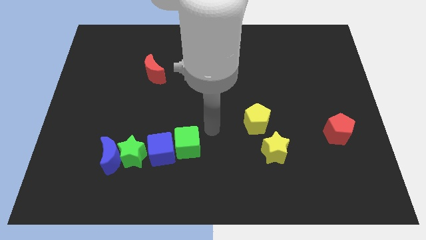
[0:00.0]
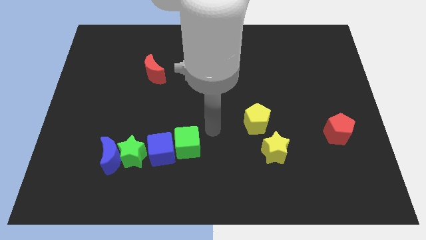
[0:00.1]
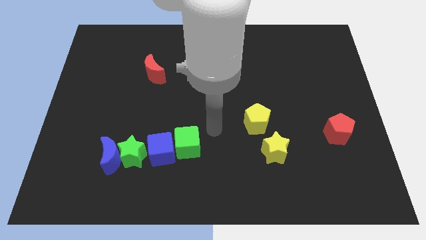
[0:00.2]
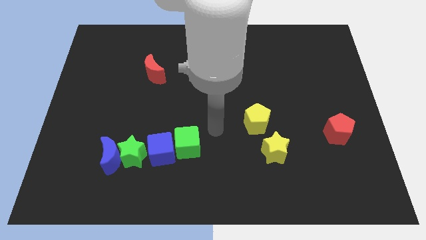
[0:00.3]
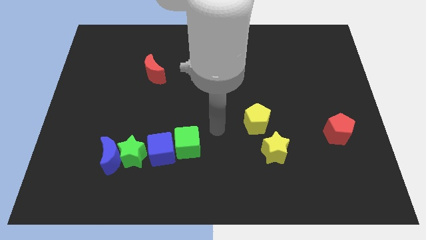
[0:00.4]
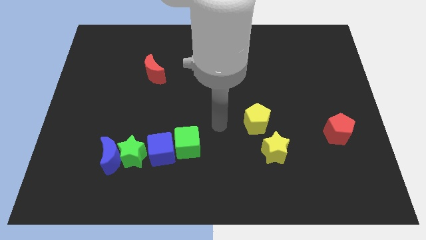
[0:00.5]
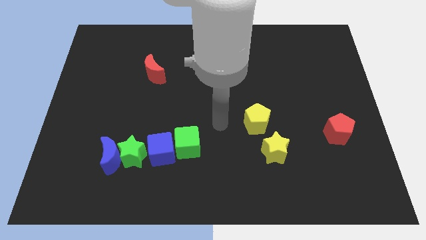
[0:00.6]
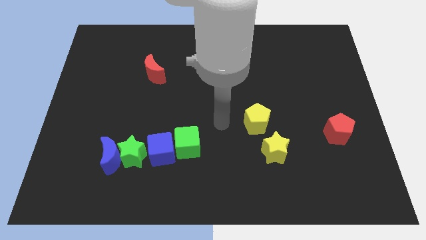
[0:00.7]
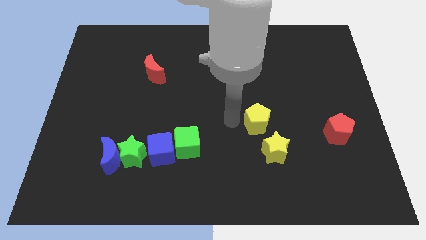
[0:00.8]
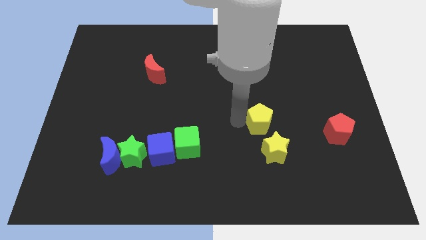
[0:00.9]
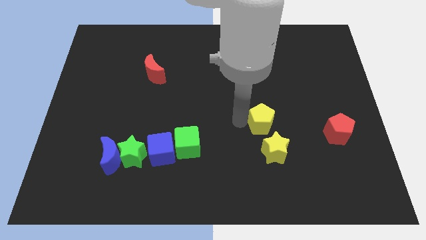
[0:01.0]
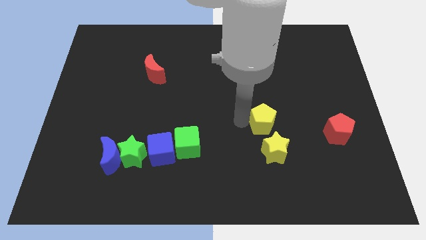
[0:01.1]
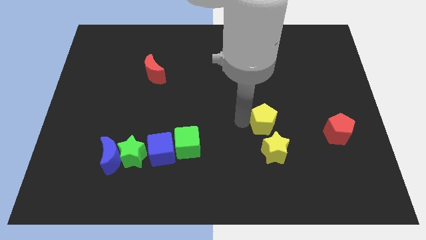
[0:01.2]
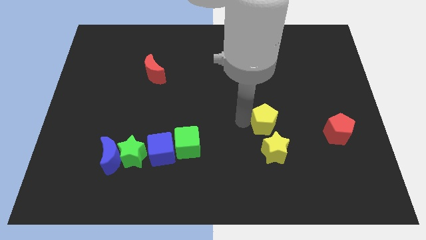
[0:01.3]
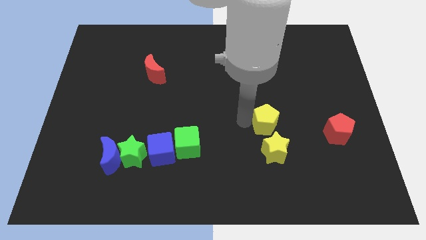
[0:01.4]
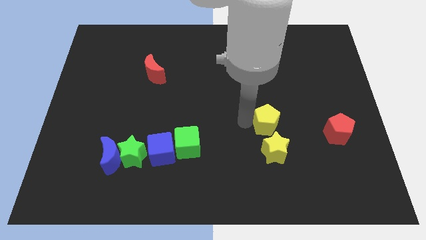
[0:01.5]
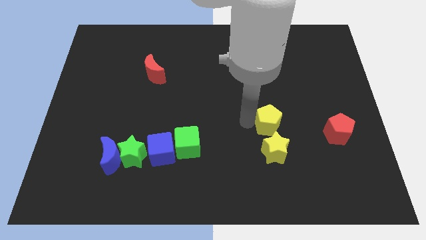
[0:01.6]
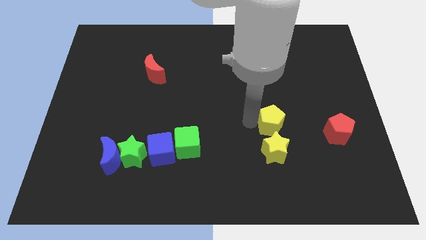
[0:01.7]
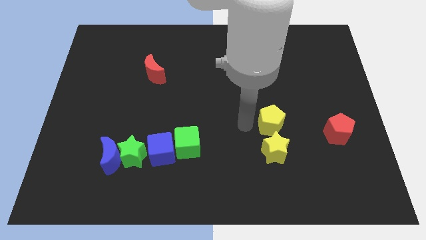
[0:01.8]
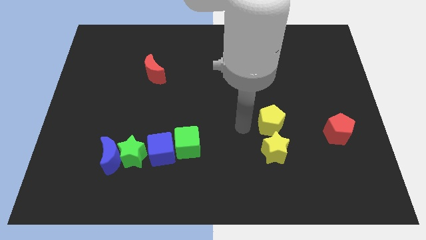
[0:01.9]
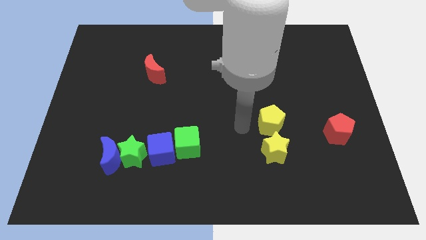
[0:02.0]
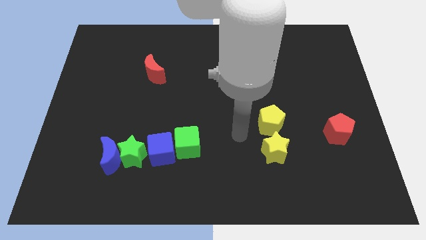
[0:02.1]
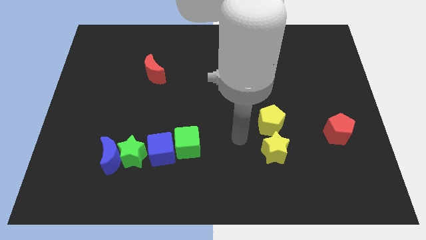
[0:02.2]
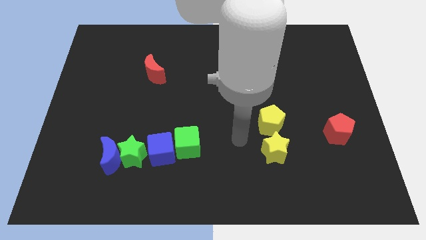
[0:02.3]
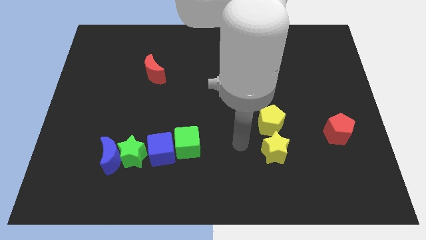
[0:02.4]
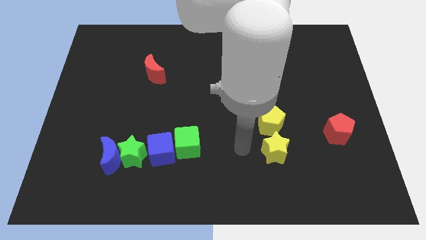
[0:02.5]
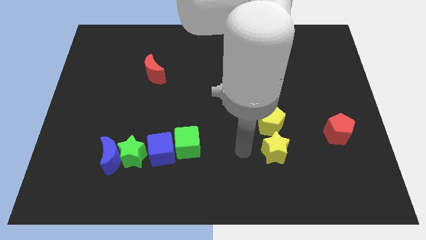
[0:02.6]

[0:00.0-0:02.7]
slightly push the yellow pentagon towards right

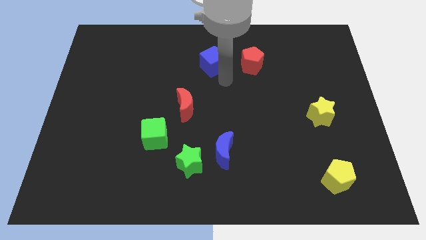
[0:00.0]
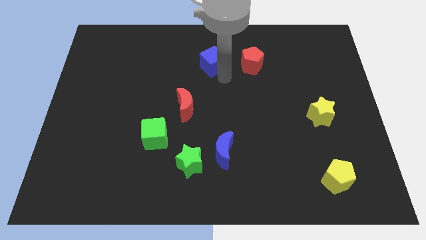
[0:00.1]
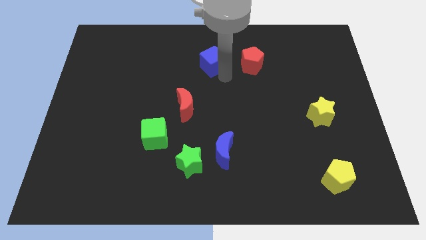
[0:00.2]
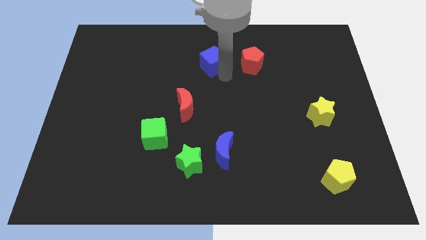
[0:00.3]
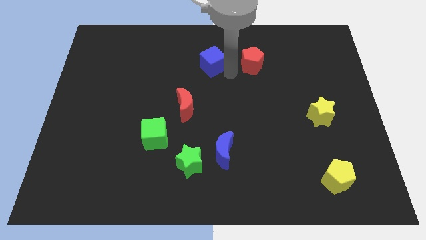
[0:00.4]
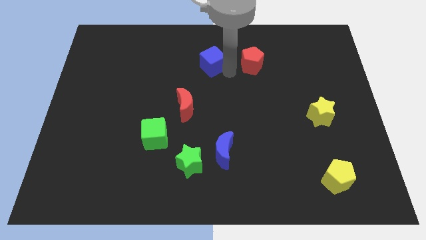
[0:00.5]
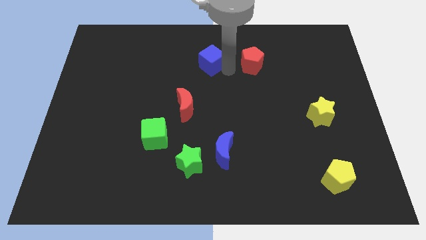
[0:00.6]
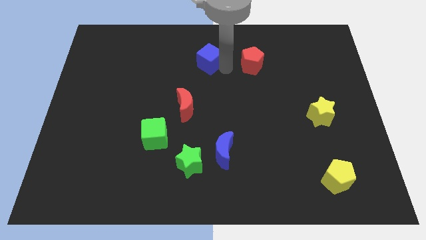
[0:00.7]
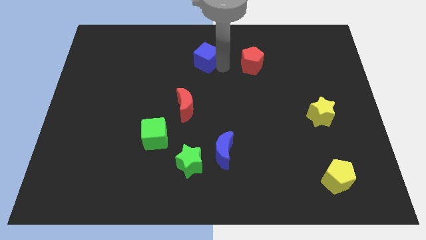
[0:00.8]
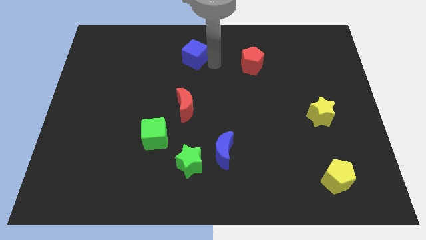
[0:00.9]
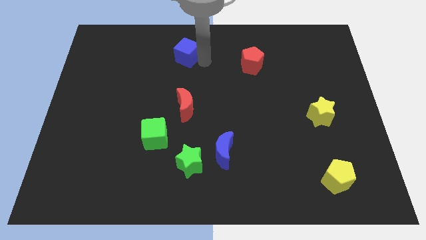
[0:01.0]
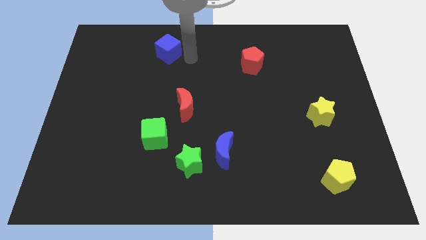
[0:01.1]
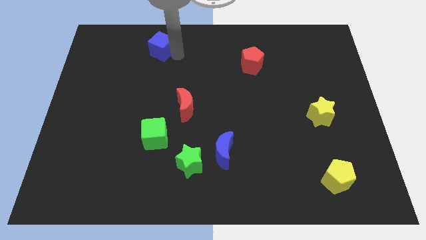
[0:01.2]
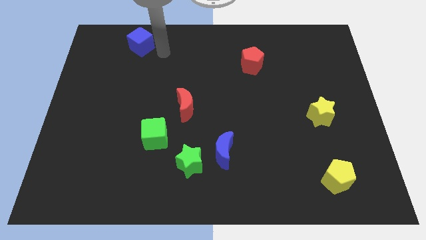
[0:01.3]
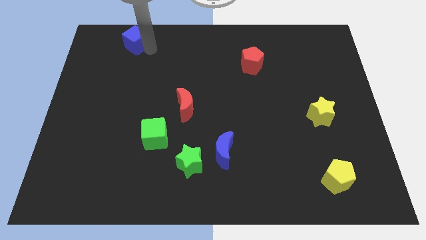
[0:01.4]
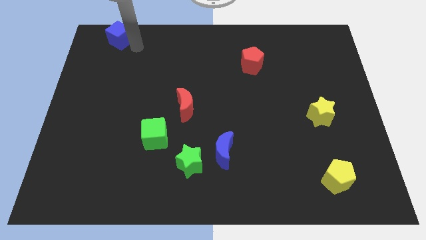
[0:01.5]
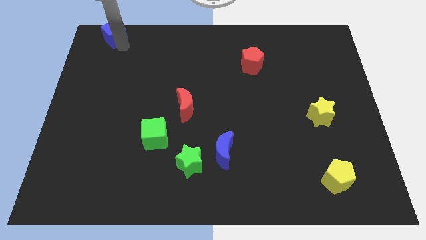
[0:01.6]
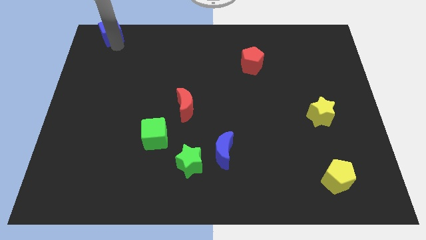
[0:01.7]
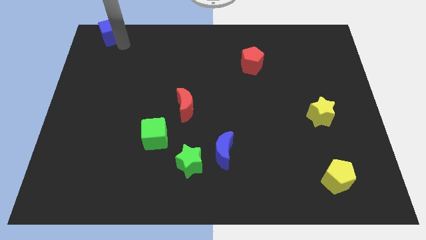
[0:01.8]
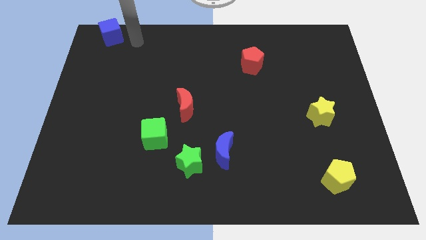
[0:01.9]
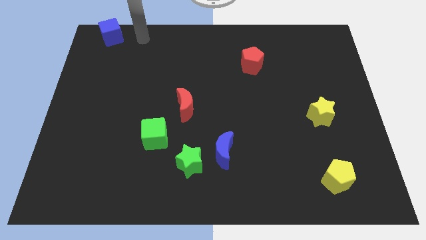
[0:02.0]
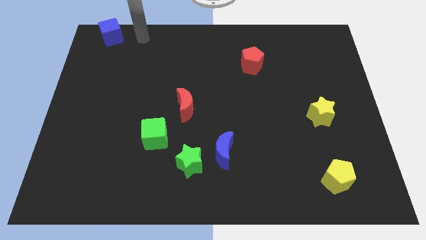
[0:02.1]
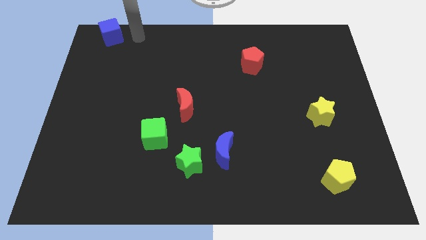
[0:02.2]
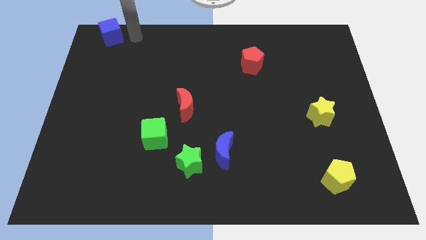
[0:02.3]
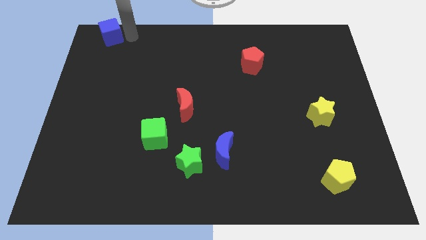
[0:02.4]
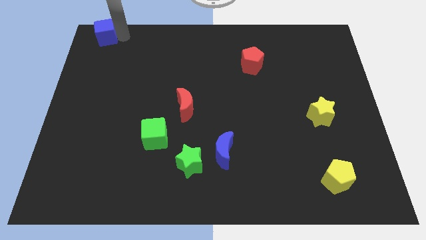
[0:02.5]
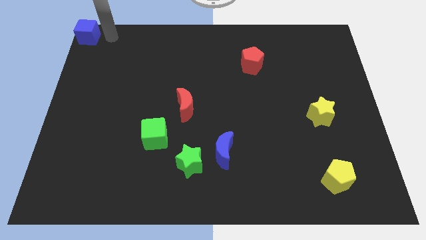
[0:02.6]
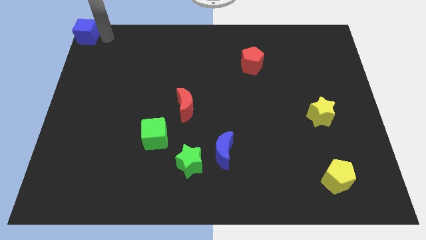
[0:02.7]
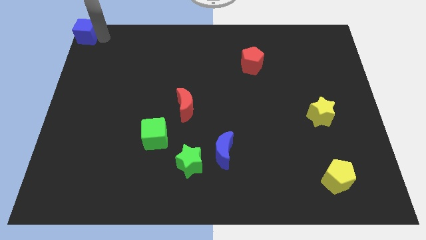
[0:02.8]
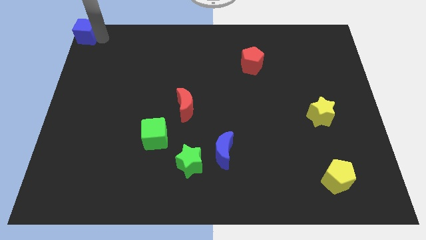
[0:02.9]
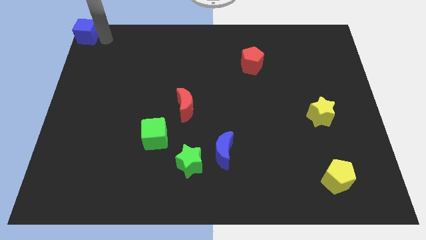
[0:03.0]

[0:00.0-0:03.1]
place blue cube to the top left corner

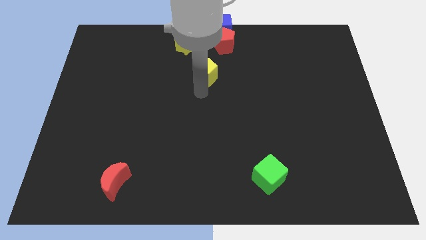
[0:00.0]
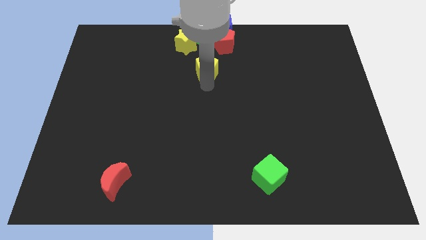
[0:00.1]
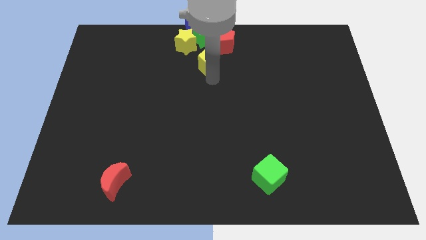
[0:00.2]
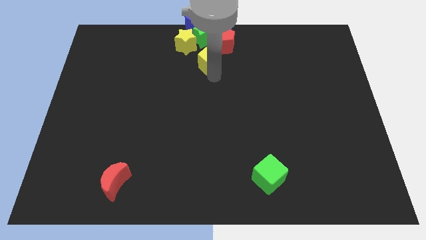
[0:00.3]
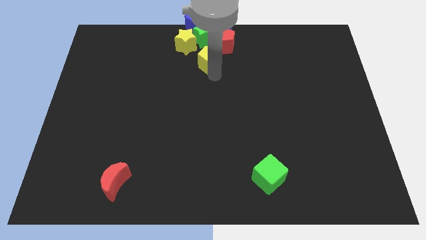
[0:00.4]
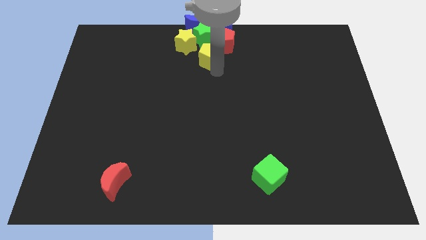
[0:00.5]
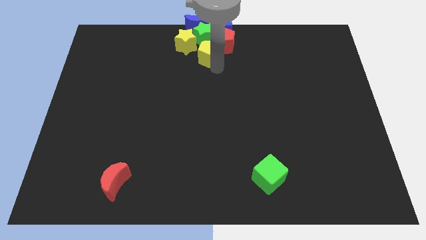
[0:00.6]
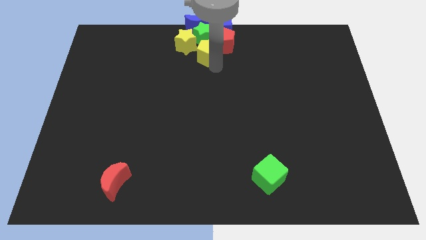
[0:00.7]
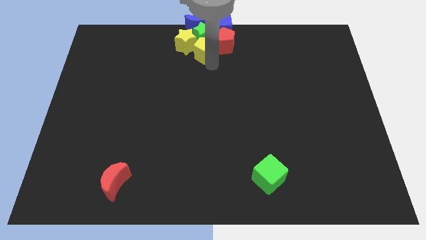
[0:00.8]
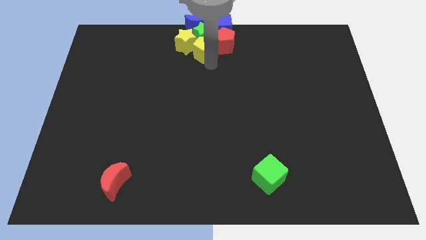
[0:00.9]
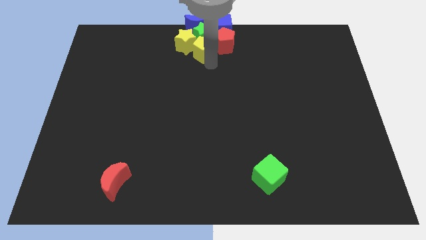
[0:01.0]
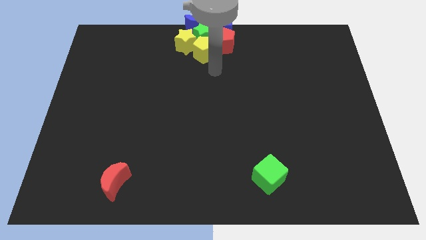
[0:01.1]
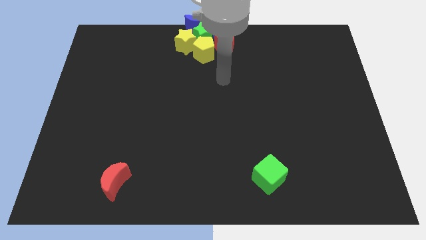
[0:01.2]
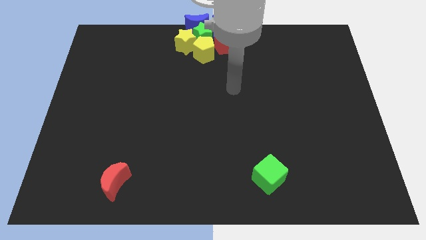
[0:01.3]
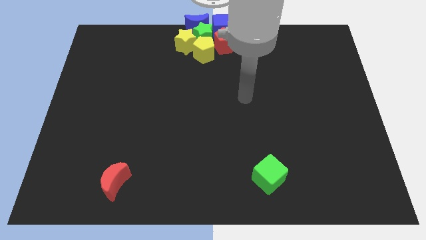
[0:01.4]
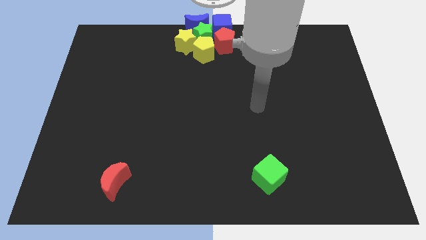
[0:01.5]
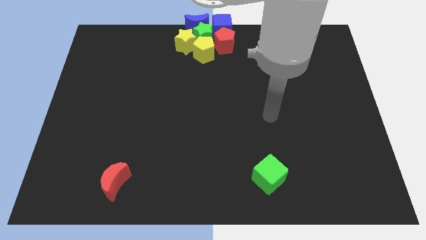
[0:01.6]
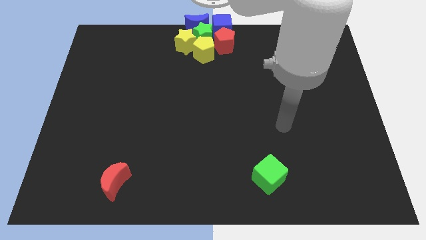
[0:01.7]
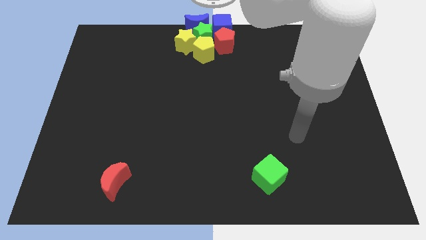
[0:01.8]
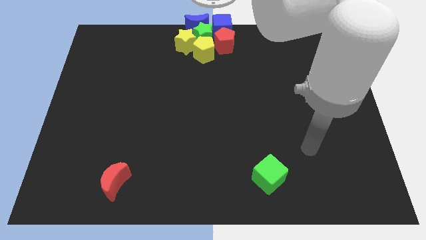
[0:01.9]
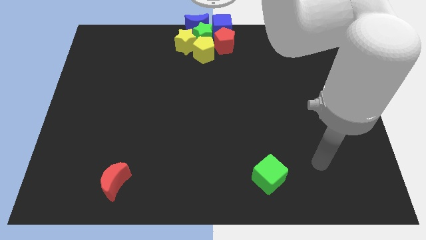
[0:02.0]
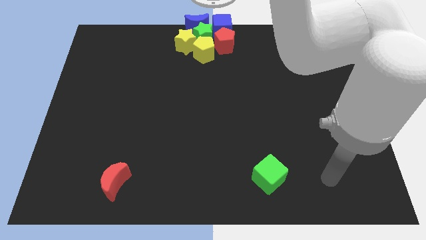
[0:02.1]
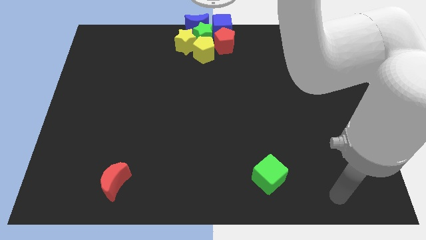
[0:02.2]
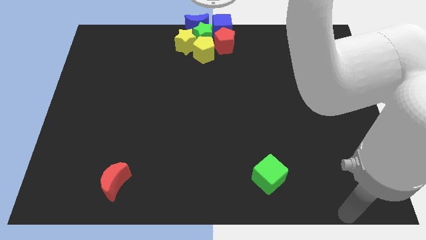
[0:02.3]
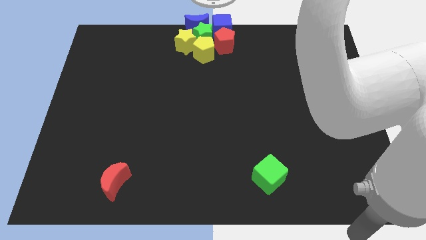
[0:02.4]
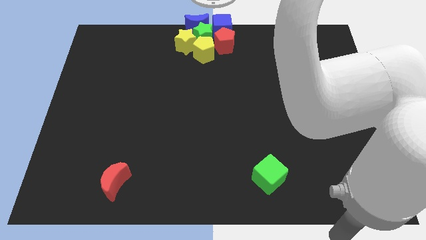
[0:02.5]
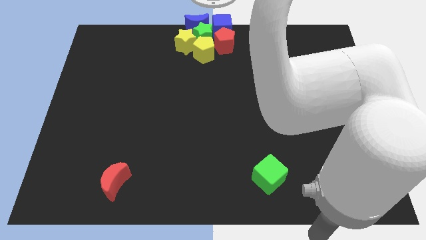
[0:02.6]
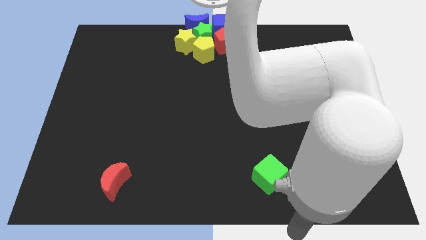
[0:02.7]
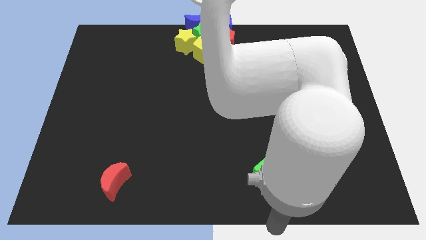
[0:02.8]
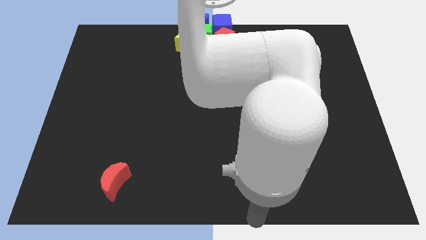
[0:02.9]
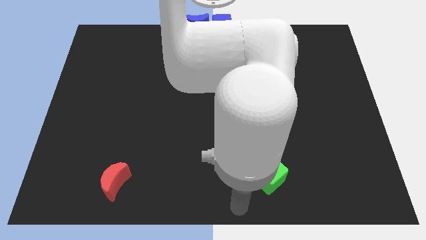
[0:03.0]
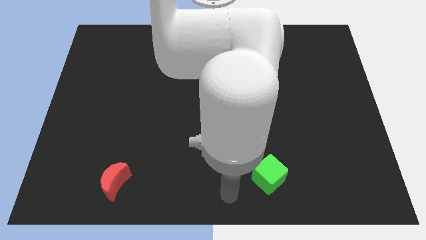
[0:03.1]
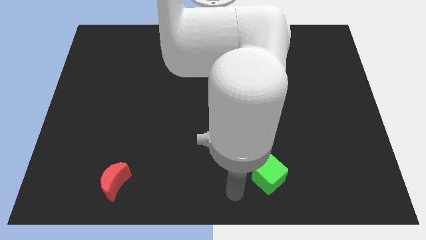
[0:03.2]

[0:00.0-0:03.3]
put the yellow pentagon below the green star
